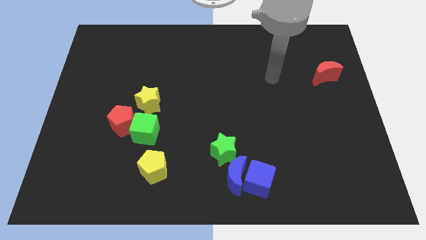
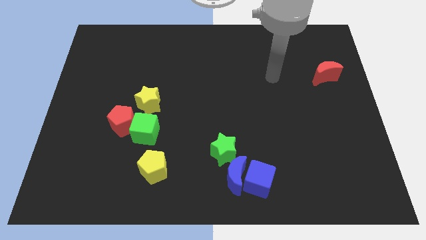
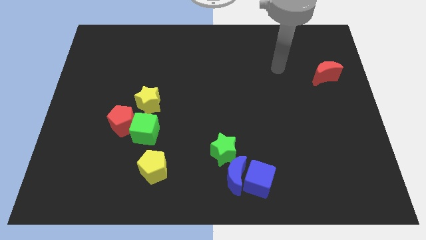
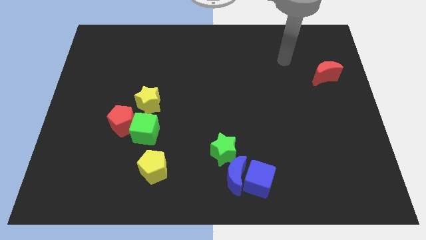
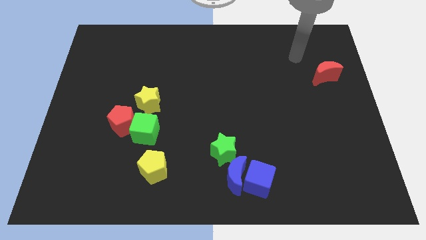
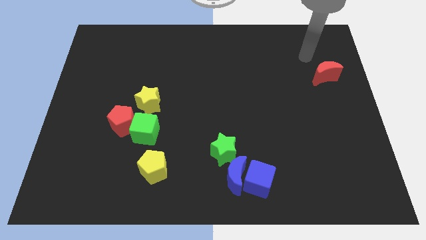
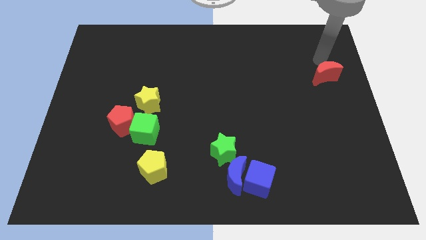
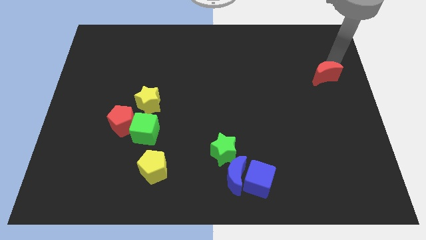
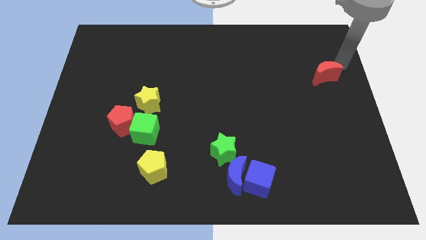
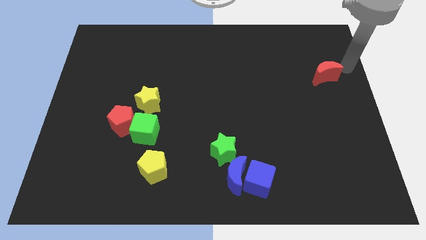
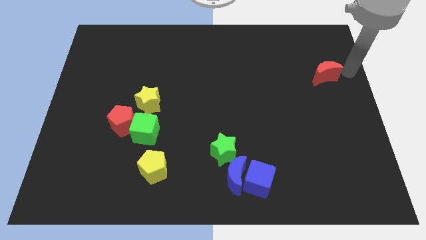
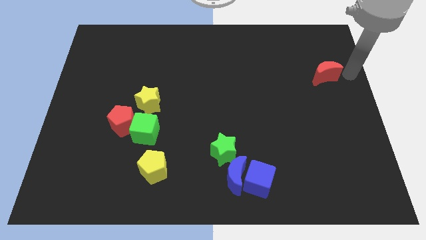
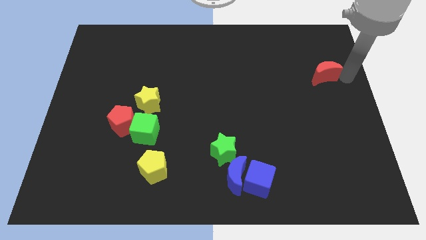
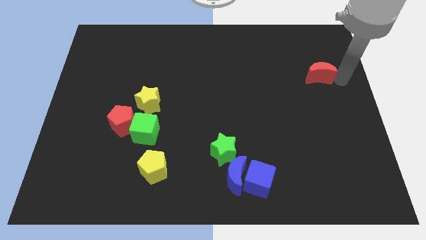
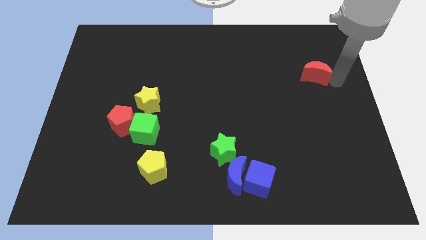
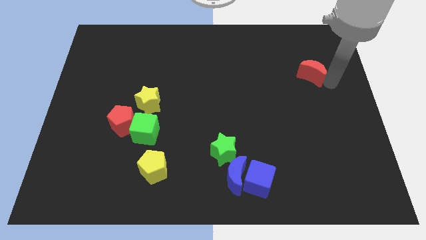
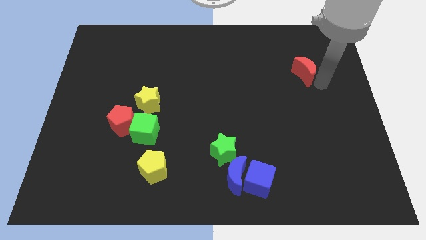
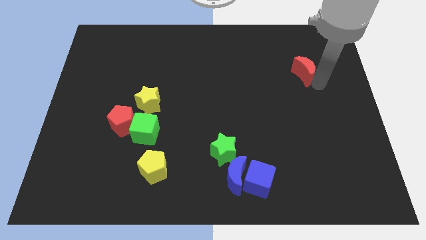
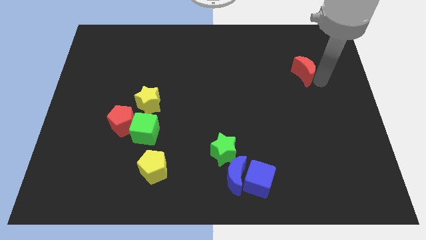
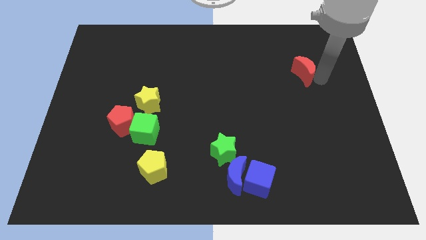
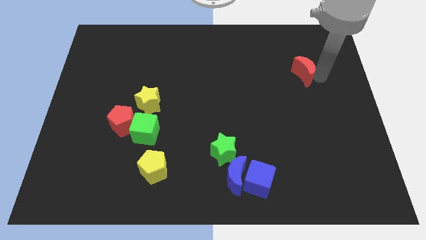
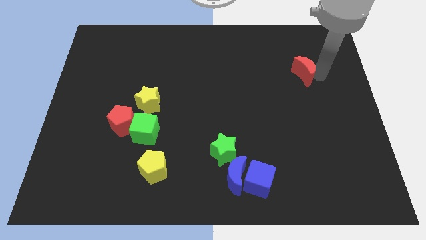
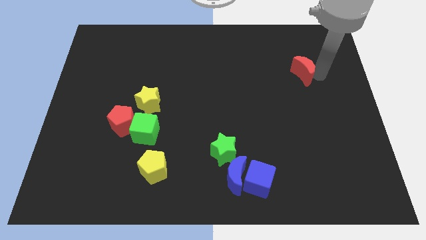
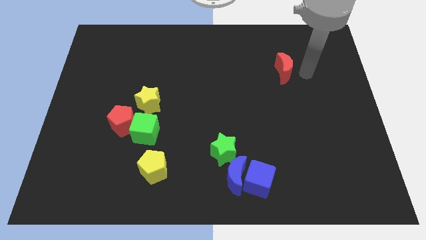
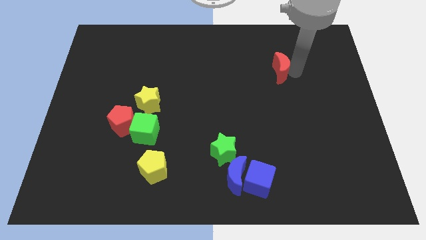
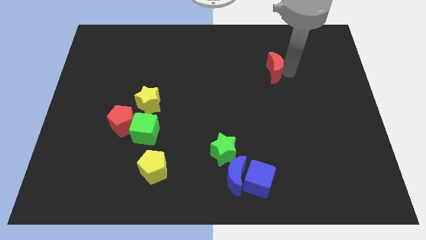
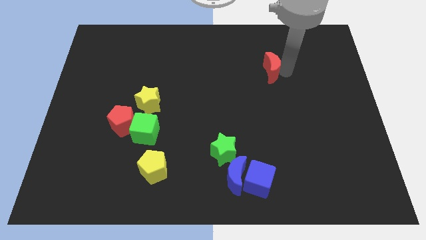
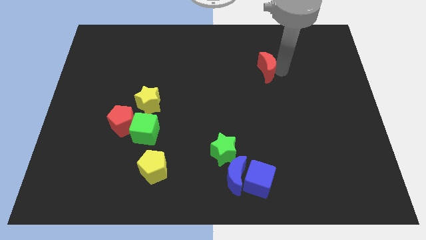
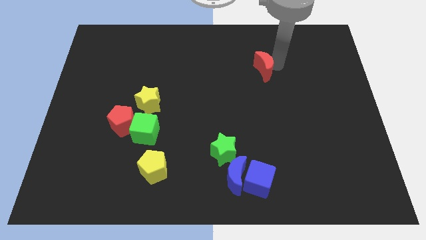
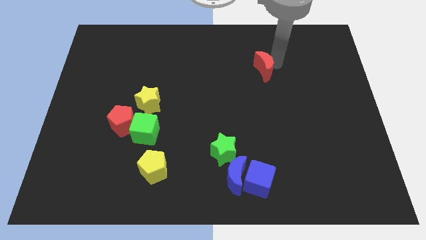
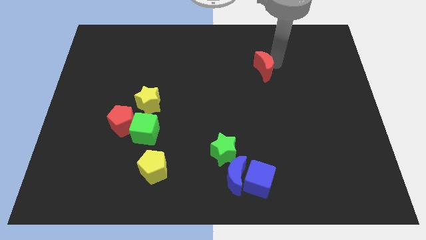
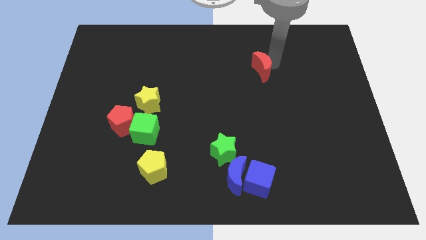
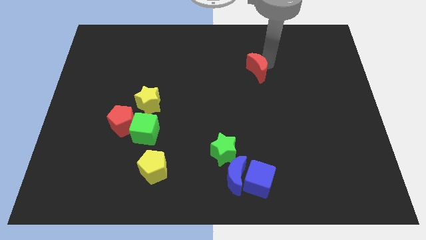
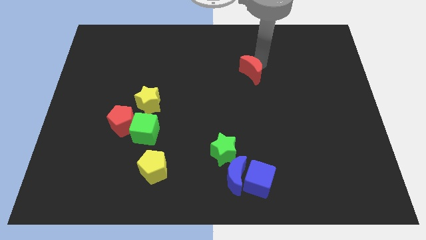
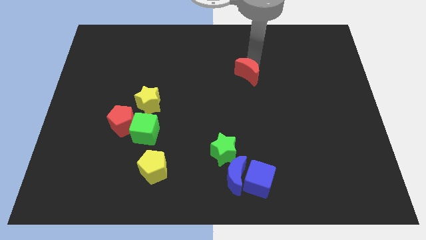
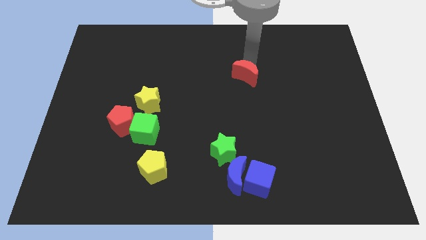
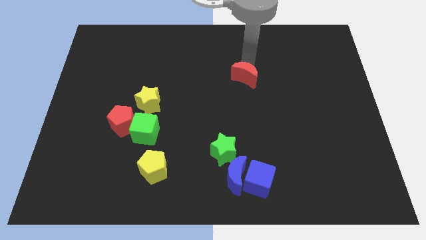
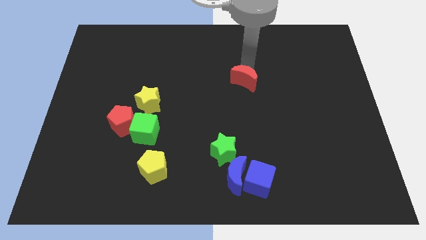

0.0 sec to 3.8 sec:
move the red moon vertically above the blue cube

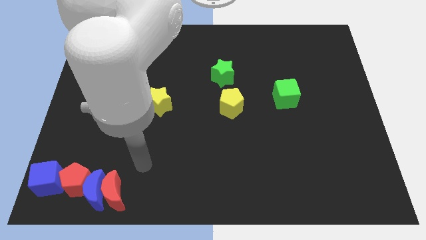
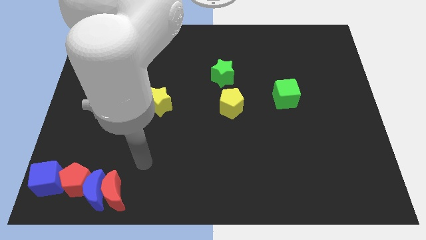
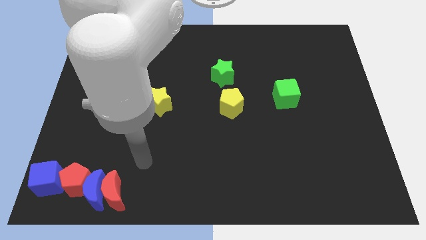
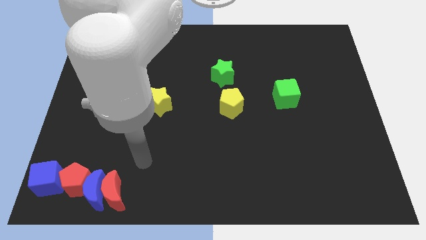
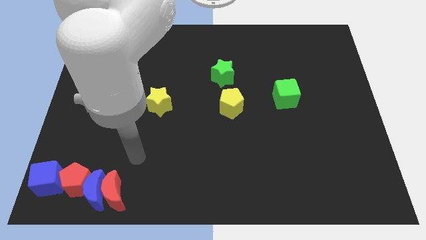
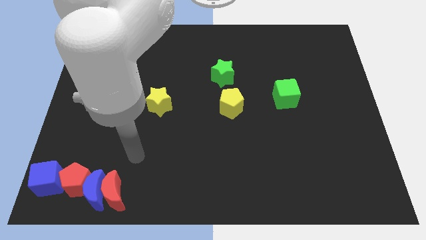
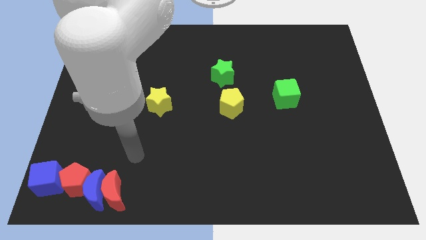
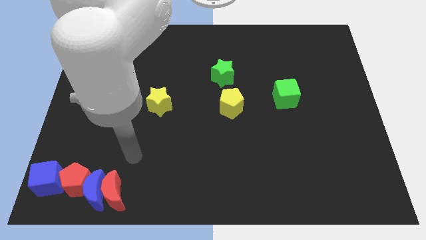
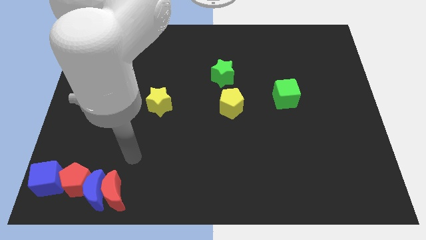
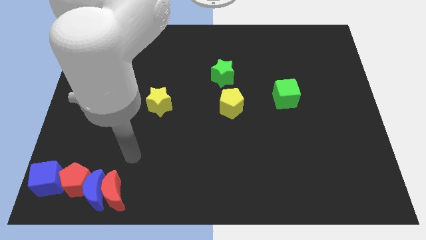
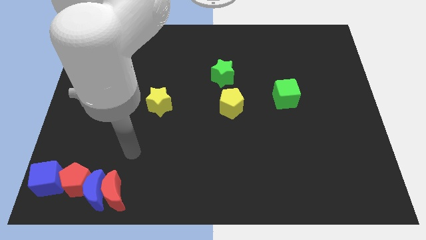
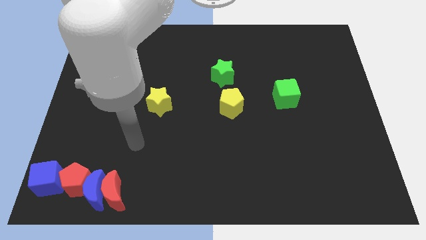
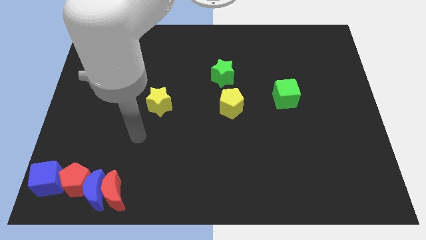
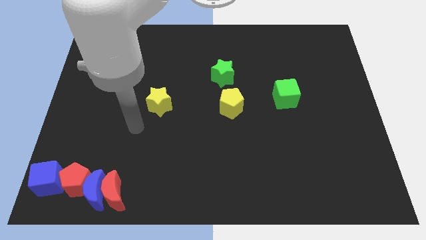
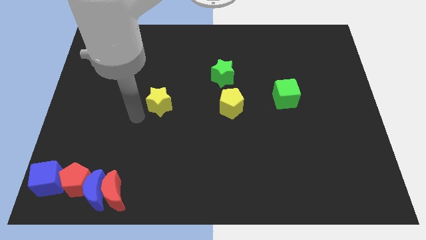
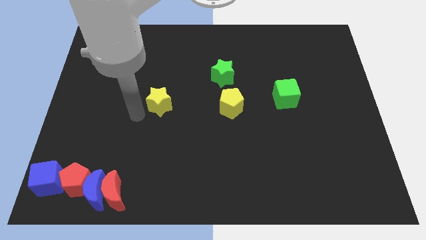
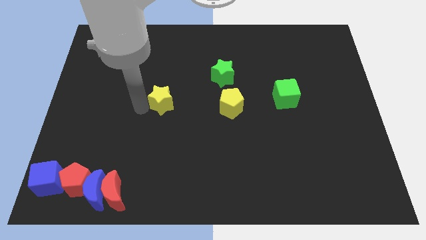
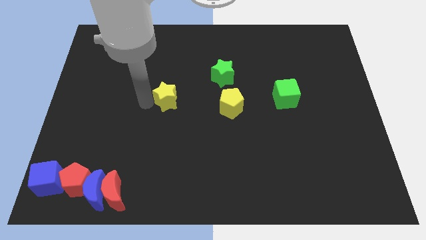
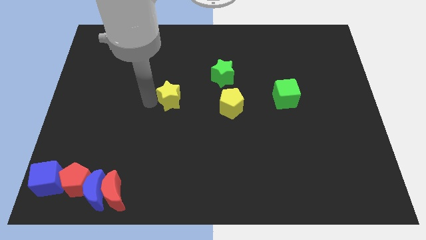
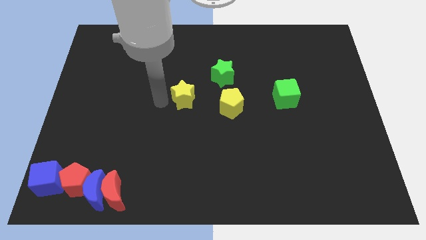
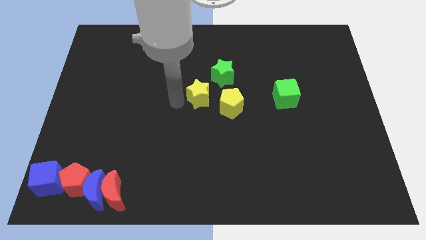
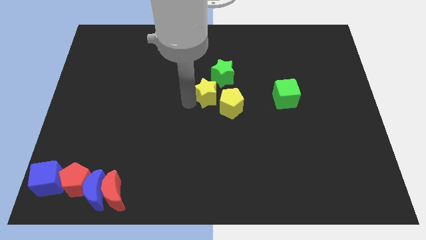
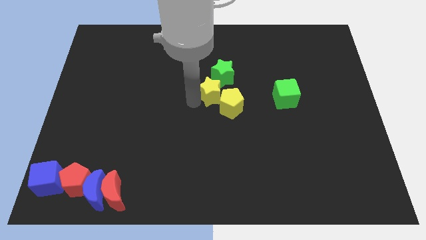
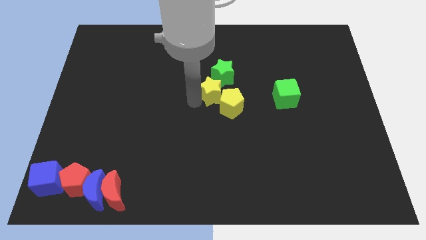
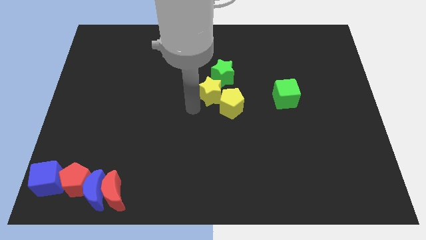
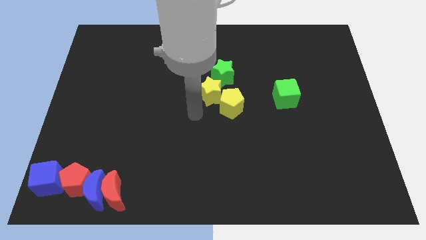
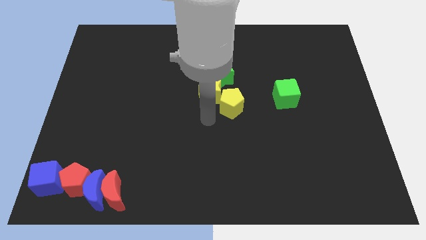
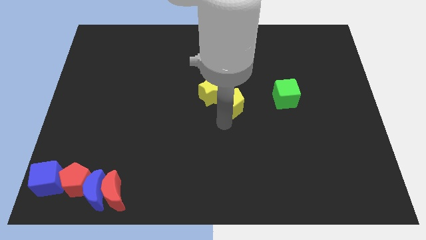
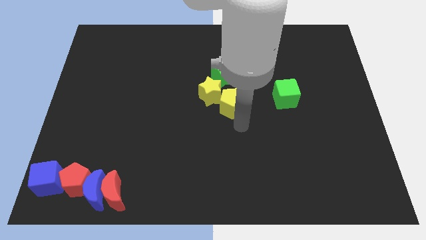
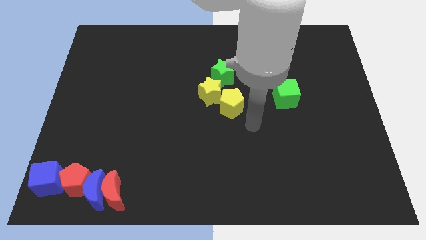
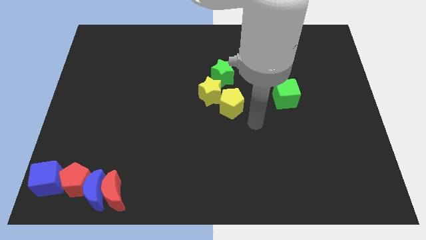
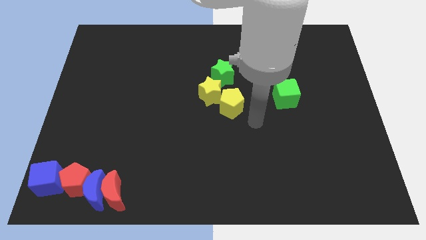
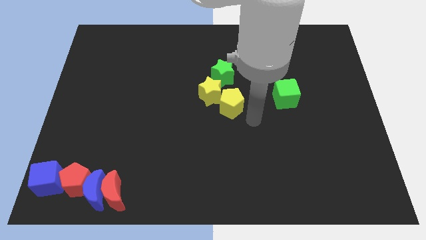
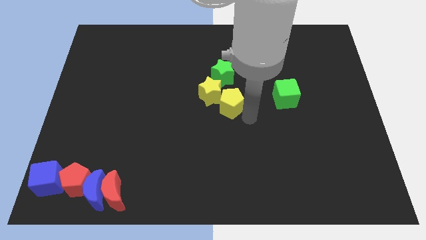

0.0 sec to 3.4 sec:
place yellow star at the bottom left side of green star

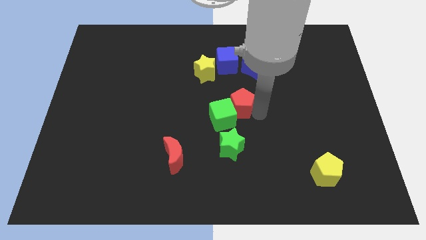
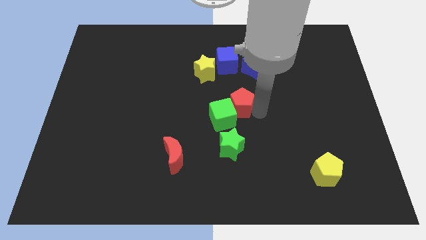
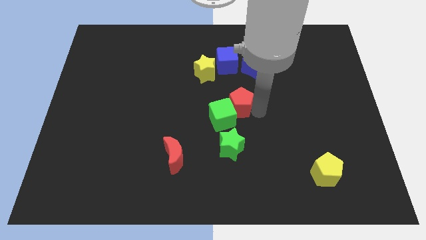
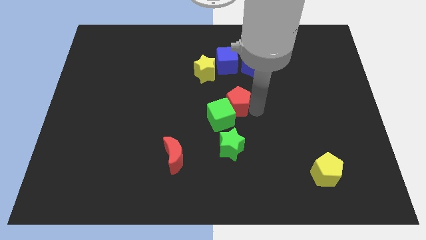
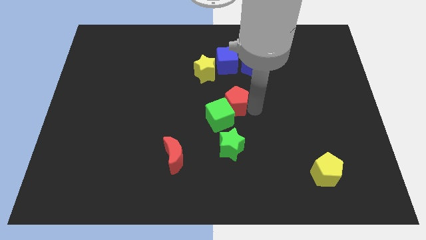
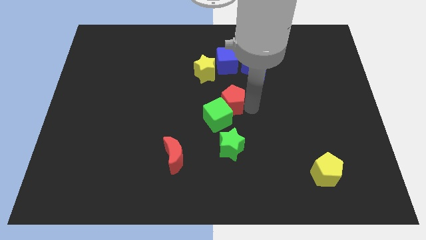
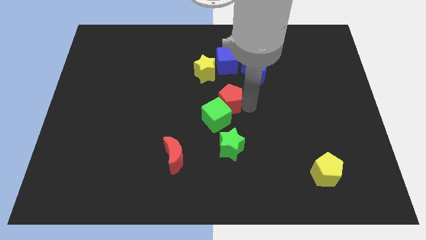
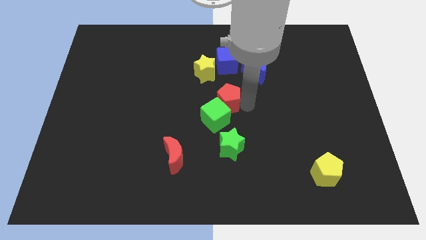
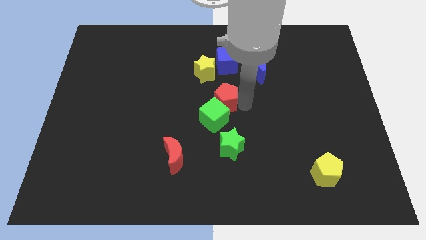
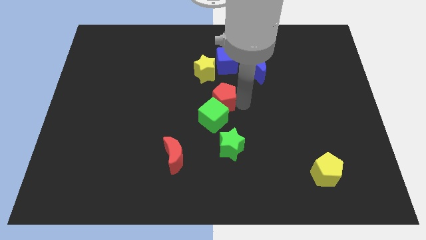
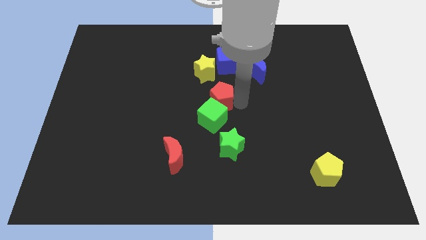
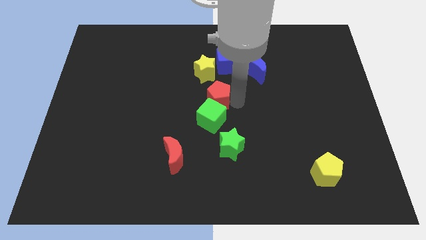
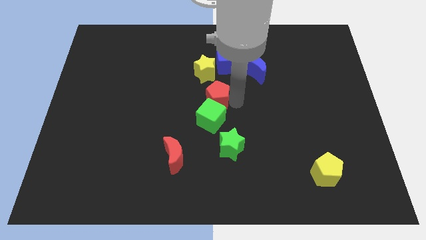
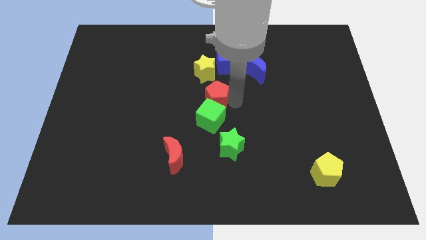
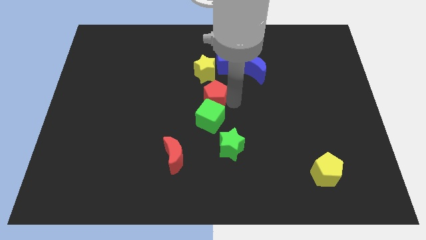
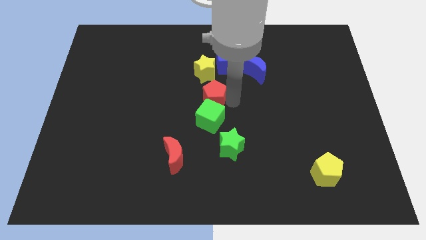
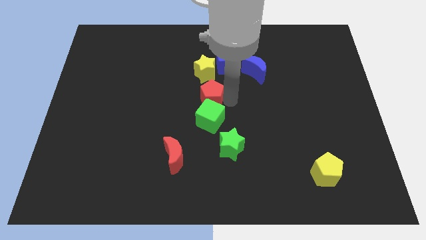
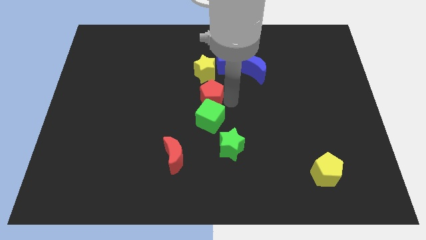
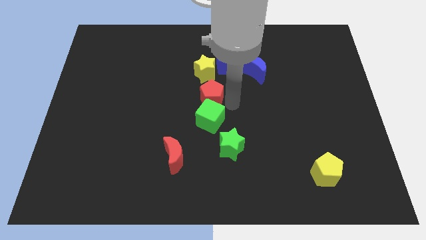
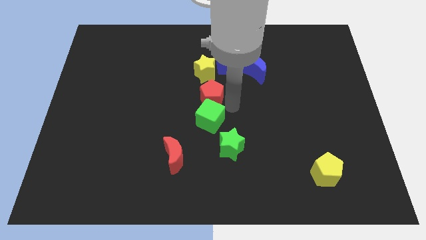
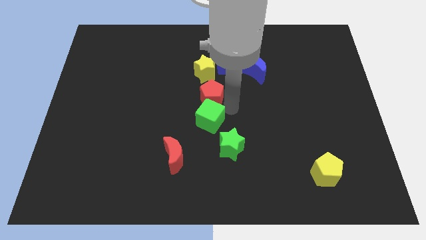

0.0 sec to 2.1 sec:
move the red pentagon in between yellow star and green cube
